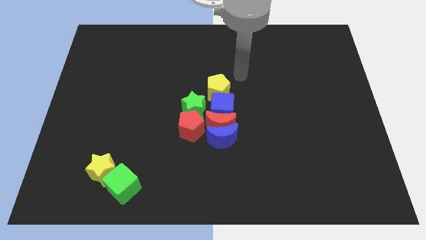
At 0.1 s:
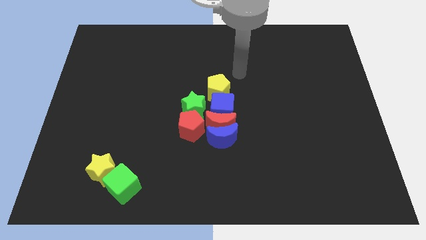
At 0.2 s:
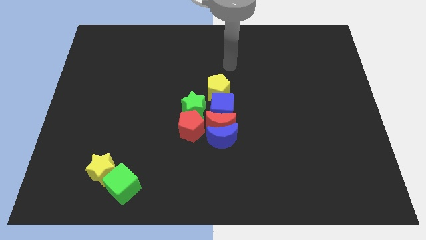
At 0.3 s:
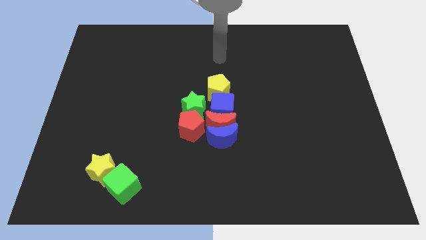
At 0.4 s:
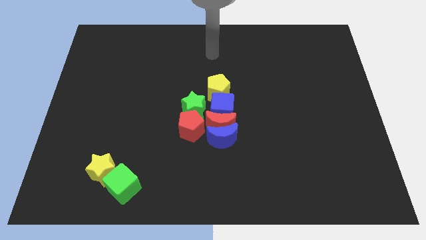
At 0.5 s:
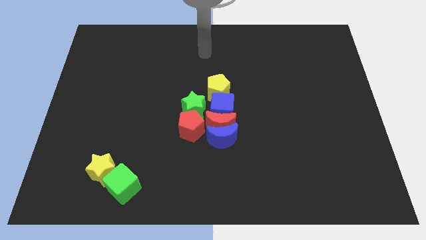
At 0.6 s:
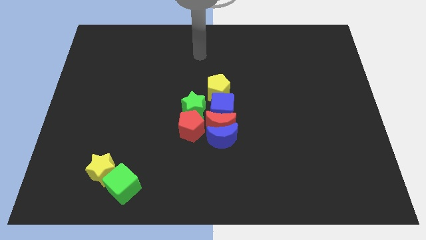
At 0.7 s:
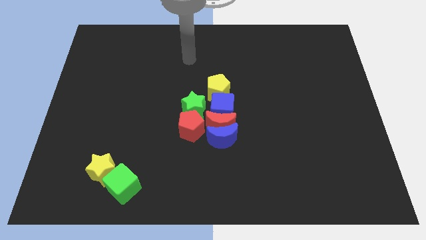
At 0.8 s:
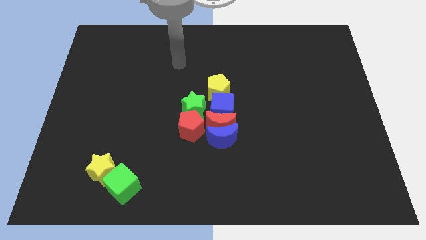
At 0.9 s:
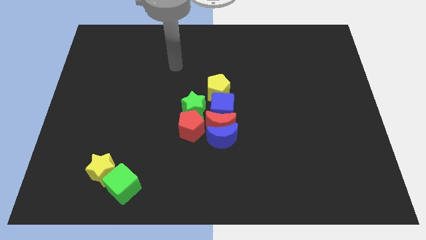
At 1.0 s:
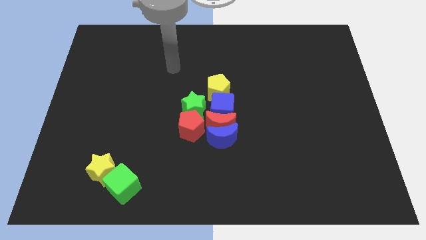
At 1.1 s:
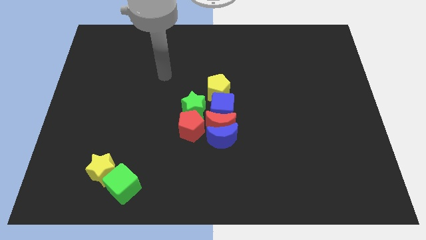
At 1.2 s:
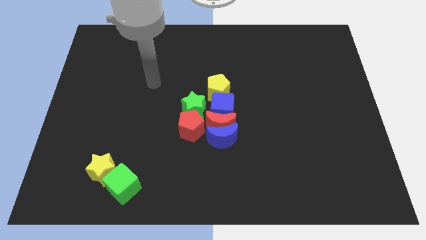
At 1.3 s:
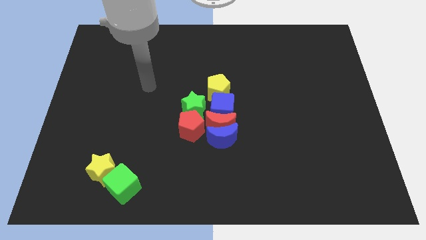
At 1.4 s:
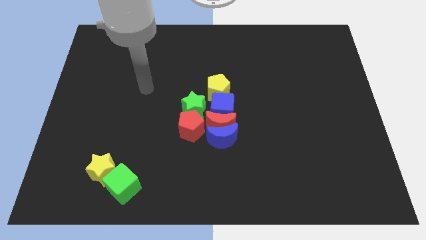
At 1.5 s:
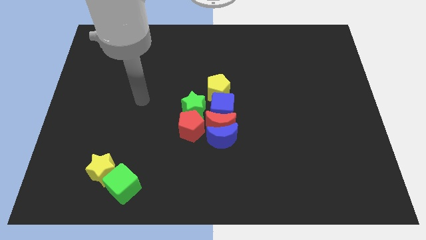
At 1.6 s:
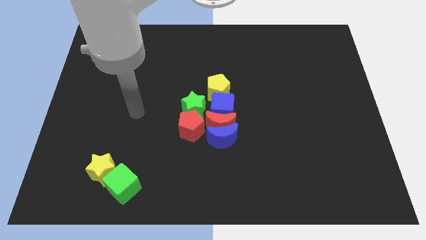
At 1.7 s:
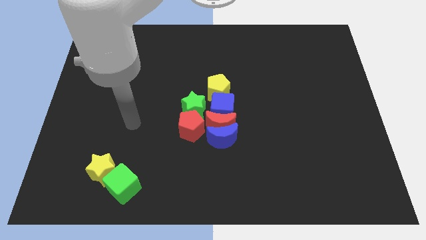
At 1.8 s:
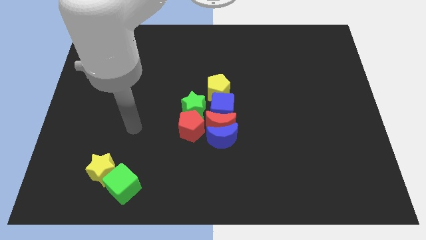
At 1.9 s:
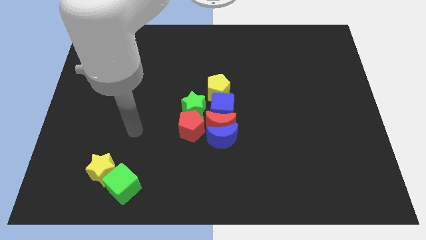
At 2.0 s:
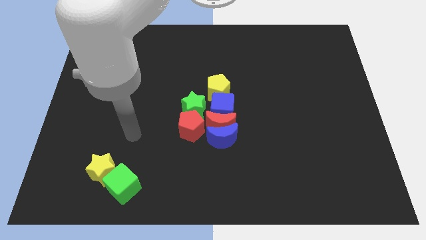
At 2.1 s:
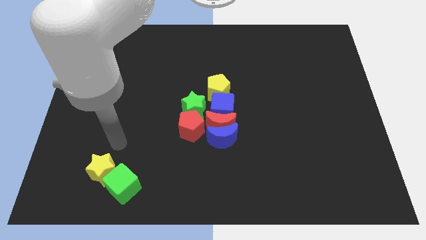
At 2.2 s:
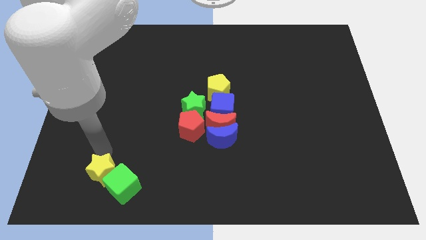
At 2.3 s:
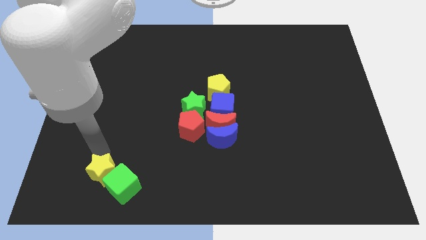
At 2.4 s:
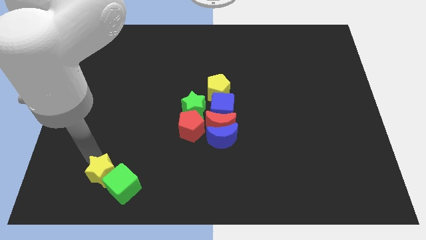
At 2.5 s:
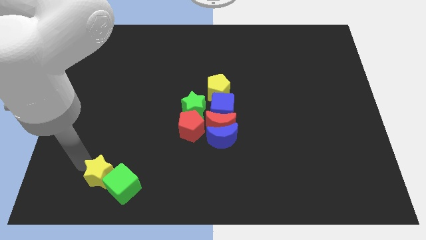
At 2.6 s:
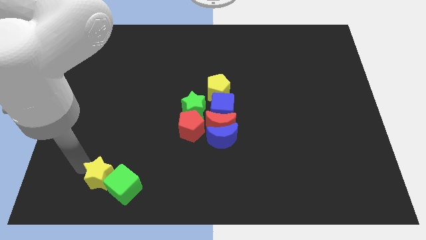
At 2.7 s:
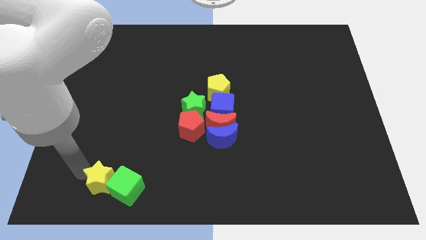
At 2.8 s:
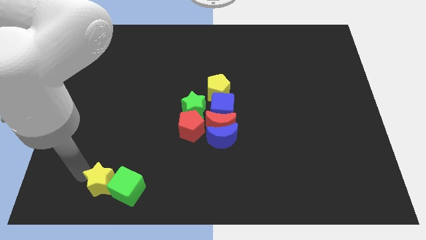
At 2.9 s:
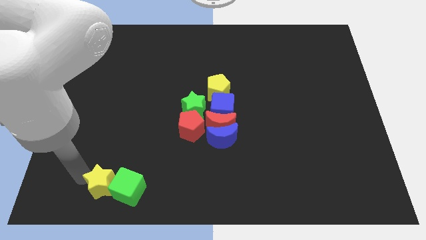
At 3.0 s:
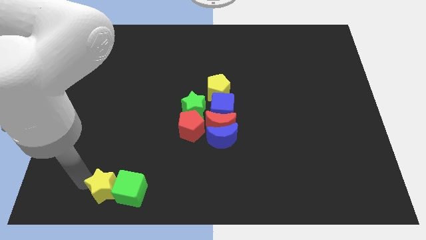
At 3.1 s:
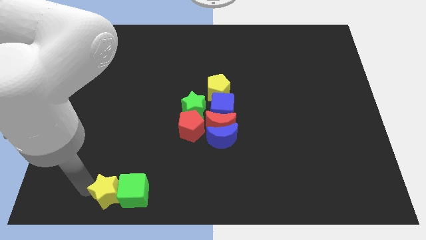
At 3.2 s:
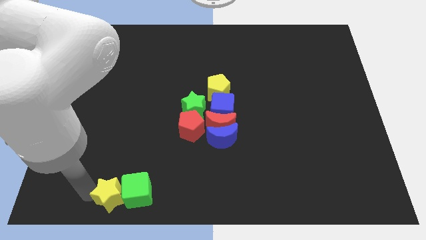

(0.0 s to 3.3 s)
push the yellow star and green cube to the bottom side

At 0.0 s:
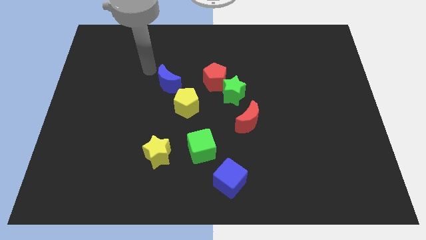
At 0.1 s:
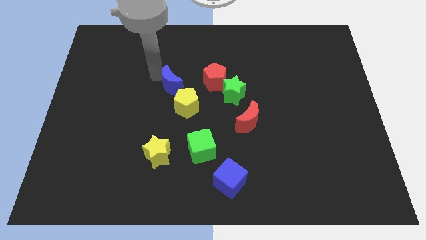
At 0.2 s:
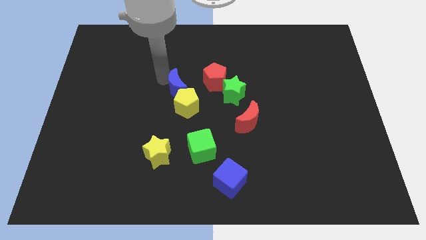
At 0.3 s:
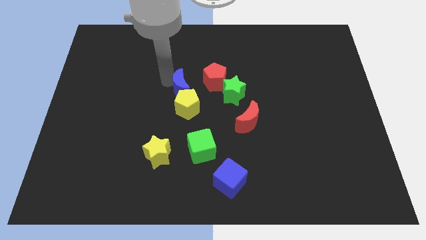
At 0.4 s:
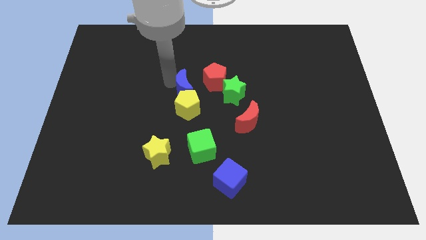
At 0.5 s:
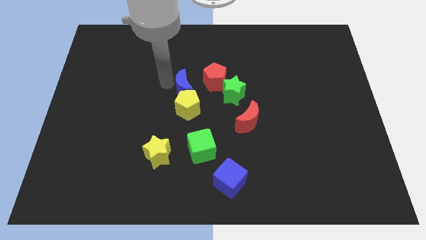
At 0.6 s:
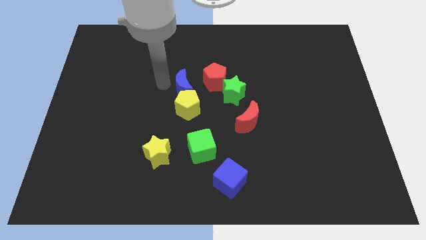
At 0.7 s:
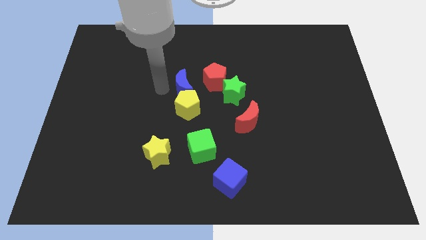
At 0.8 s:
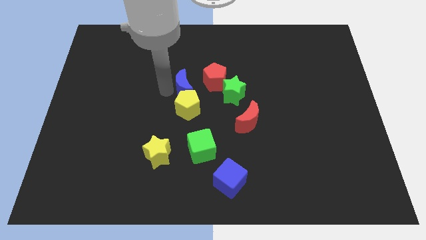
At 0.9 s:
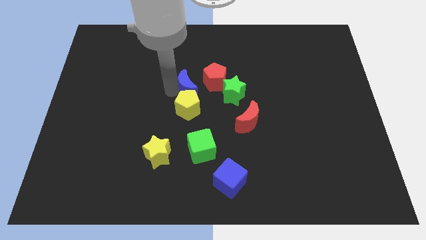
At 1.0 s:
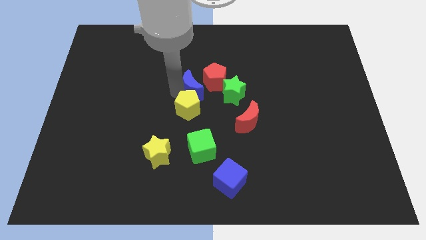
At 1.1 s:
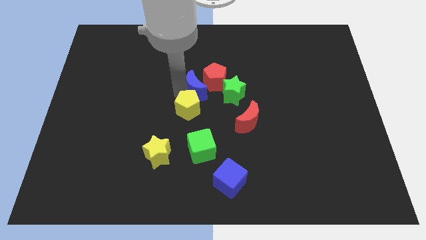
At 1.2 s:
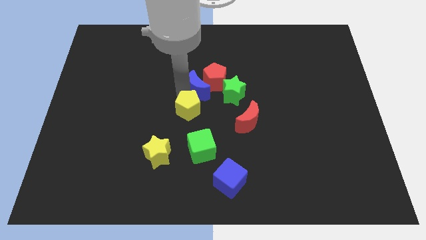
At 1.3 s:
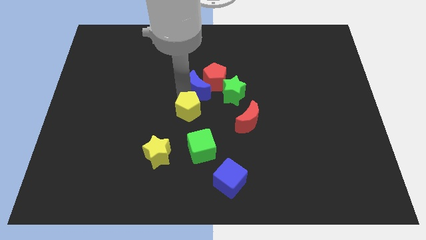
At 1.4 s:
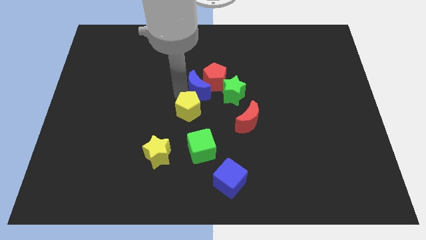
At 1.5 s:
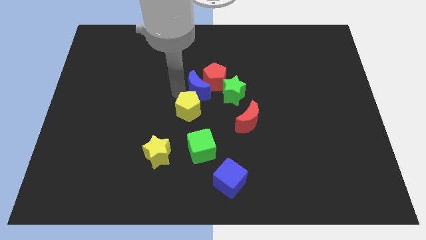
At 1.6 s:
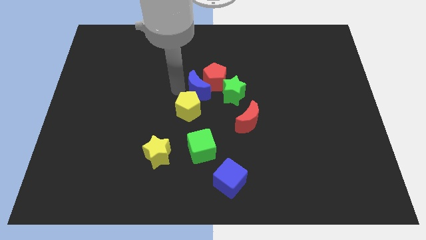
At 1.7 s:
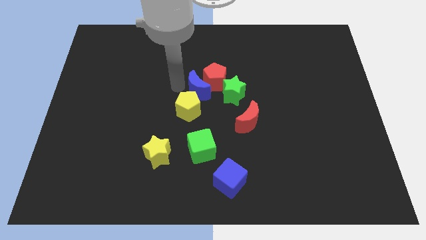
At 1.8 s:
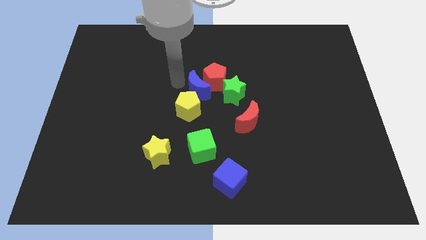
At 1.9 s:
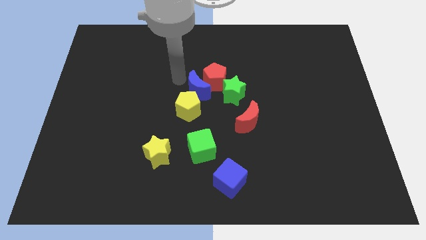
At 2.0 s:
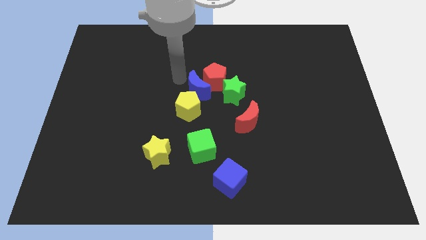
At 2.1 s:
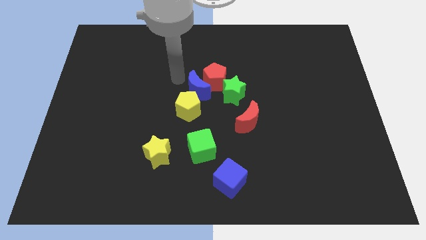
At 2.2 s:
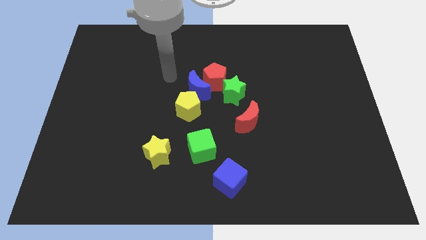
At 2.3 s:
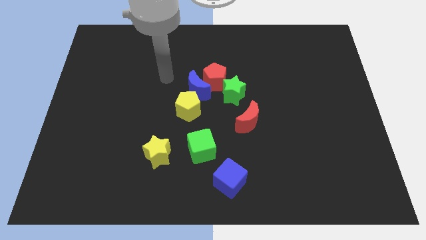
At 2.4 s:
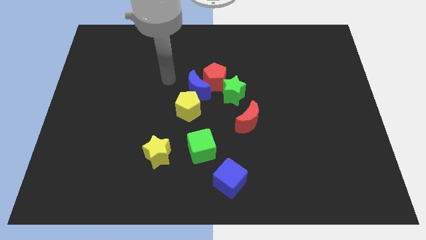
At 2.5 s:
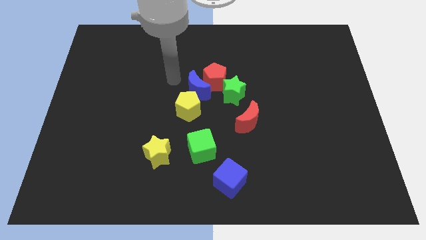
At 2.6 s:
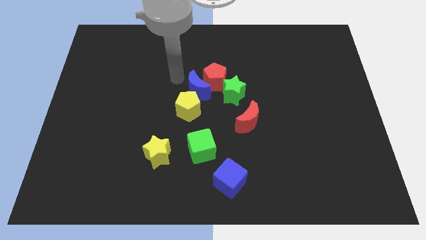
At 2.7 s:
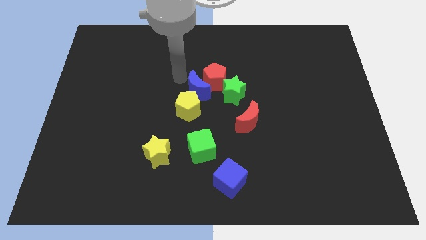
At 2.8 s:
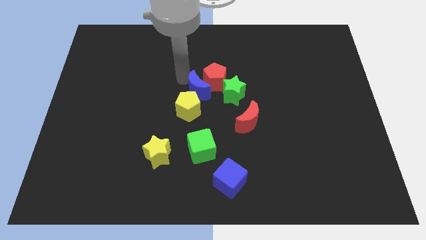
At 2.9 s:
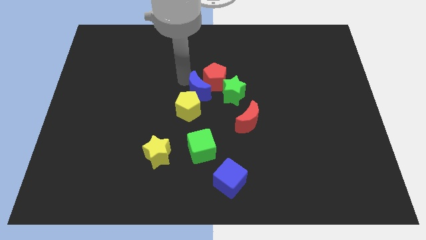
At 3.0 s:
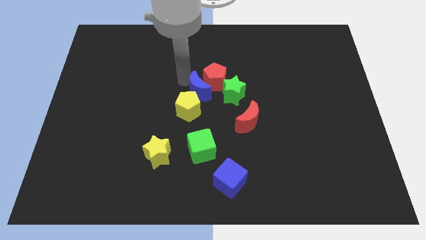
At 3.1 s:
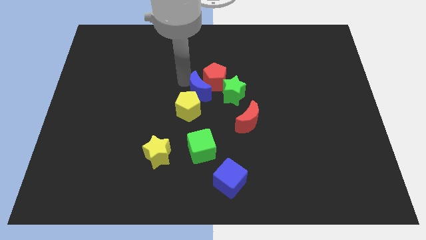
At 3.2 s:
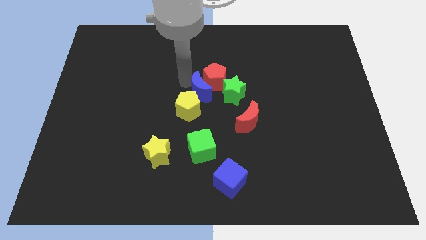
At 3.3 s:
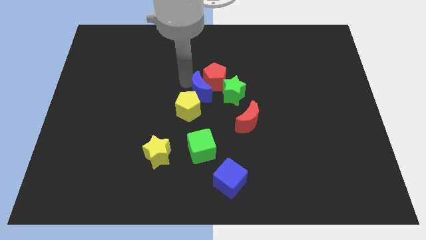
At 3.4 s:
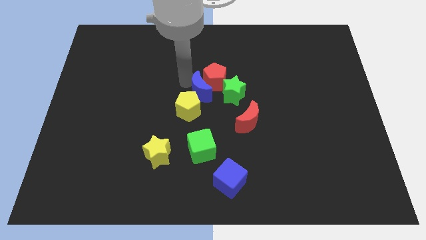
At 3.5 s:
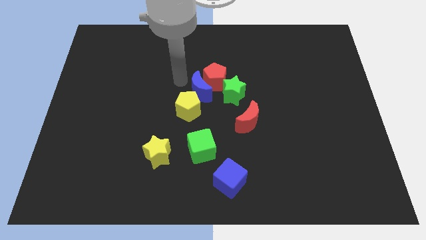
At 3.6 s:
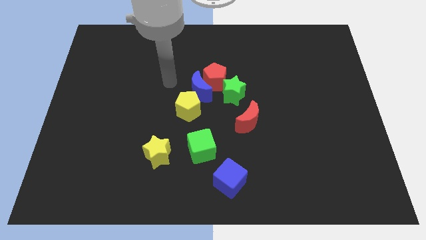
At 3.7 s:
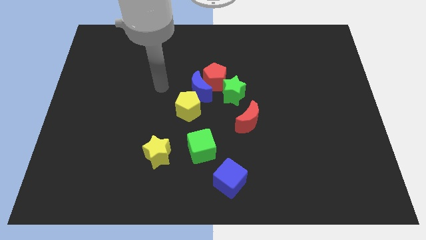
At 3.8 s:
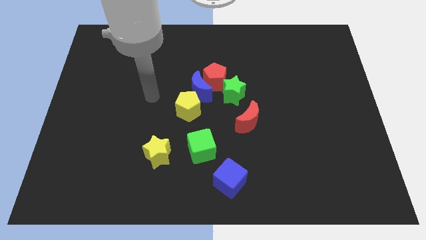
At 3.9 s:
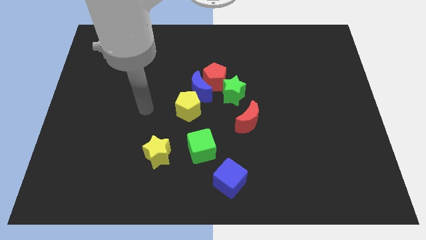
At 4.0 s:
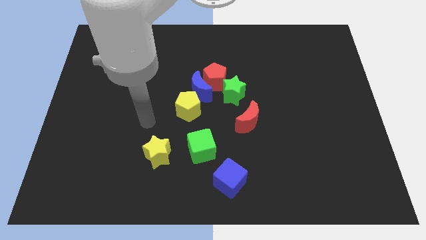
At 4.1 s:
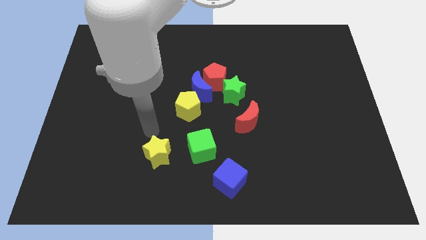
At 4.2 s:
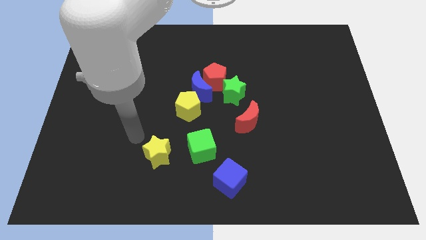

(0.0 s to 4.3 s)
push the blue crescent into yellow pentagon

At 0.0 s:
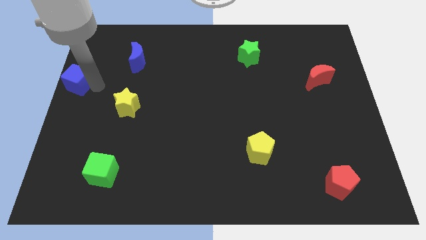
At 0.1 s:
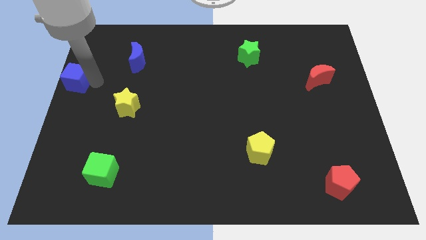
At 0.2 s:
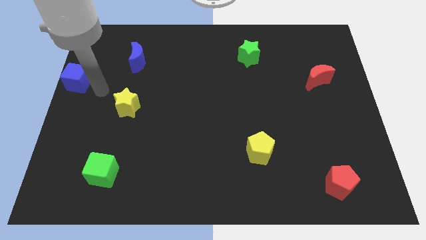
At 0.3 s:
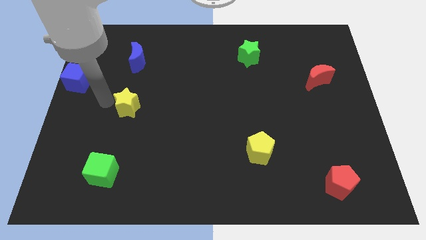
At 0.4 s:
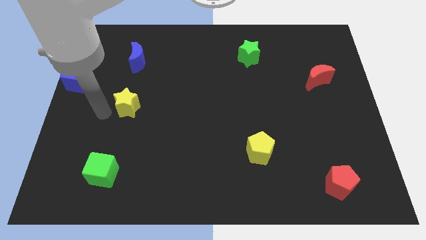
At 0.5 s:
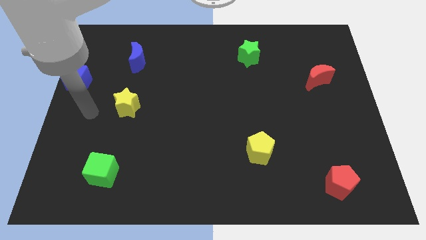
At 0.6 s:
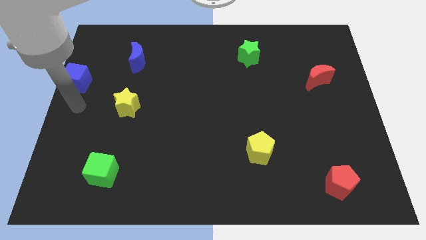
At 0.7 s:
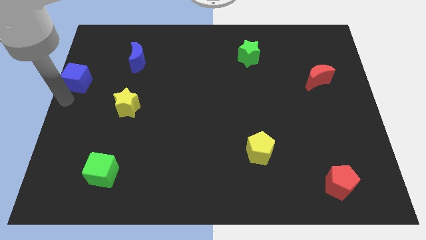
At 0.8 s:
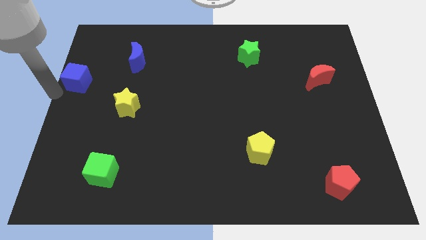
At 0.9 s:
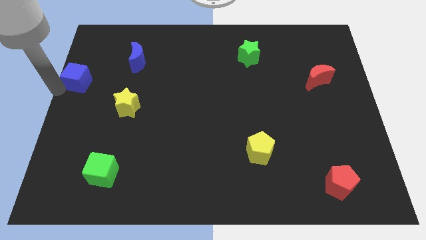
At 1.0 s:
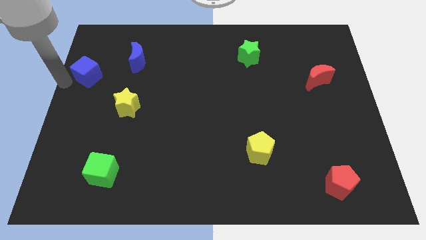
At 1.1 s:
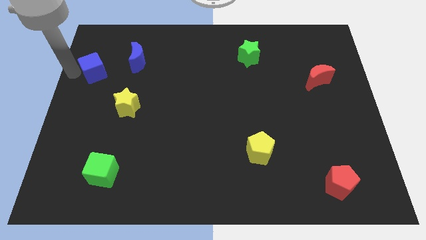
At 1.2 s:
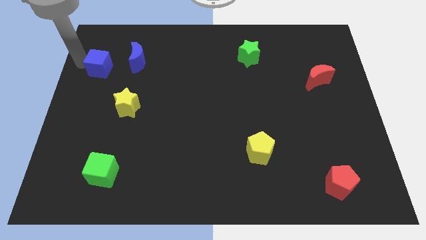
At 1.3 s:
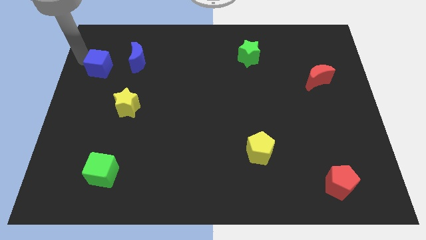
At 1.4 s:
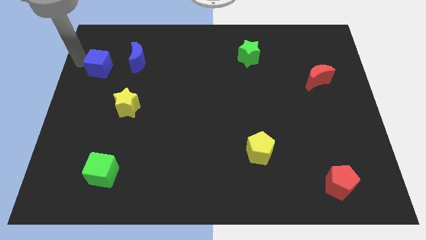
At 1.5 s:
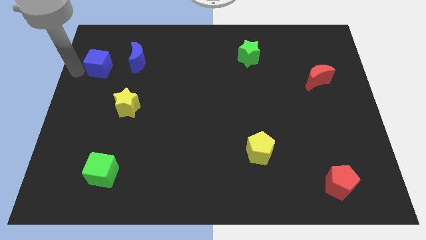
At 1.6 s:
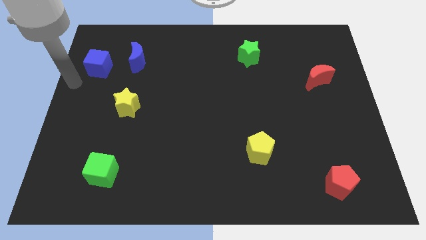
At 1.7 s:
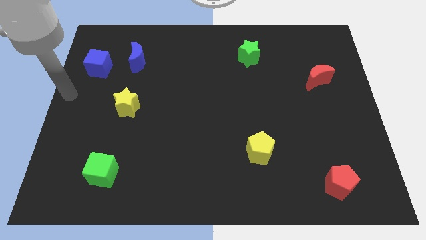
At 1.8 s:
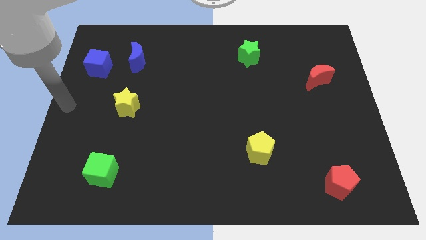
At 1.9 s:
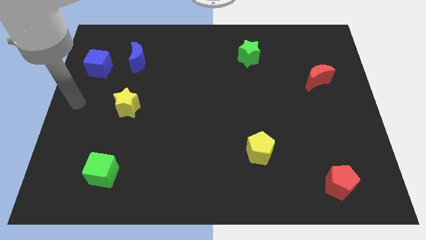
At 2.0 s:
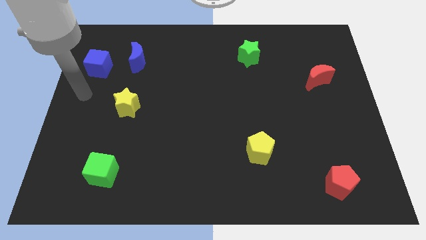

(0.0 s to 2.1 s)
place blue cube to the left of blue moon
